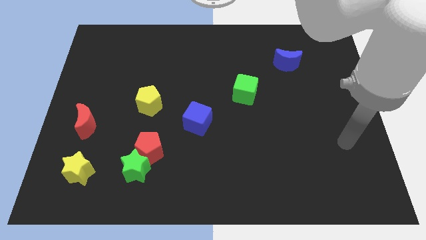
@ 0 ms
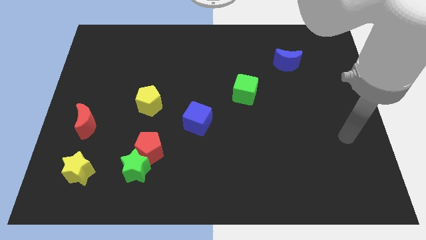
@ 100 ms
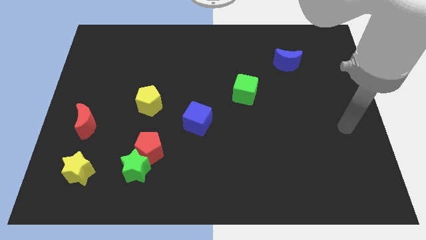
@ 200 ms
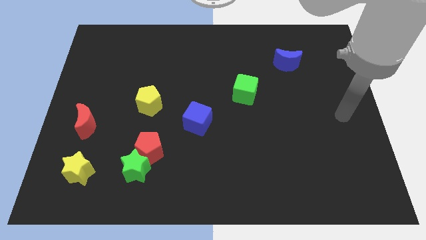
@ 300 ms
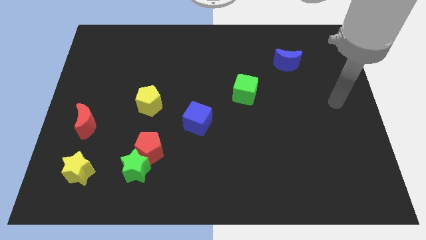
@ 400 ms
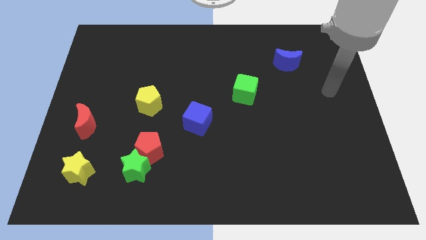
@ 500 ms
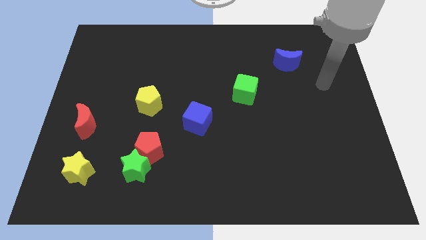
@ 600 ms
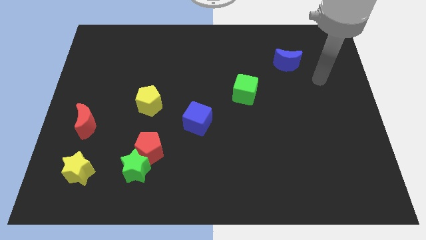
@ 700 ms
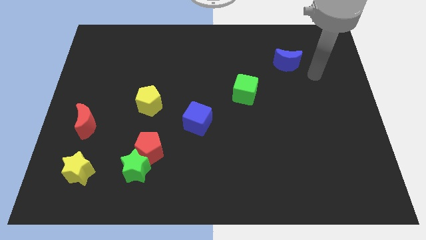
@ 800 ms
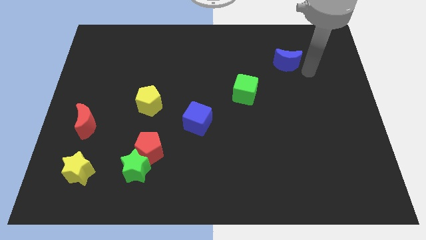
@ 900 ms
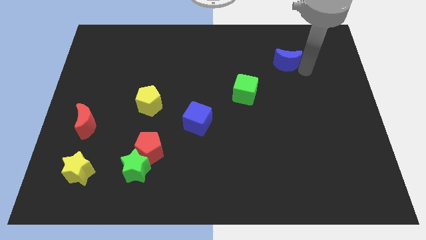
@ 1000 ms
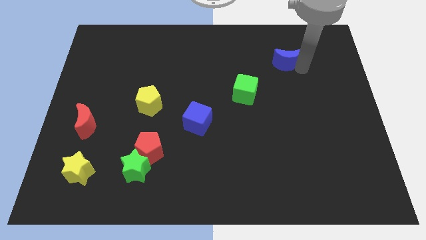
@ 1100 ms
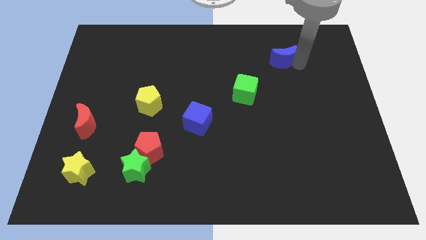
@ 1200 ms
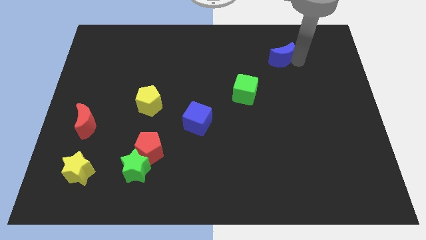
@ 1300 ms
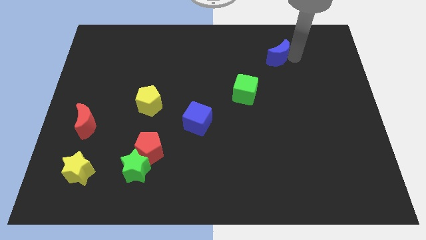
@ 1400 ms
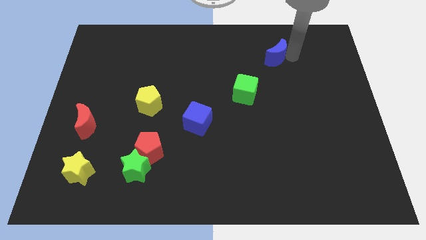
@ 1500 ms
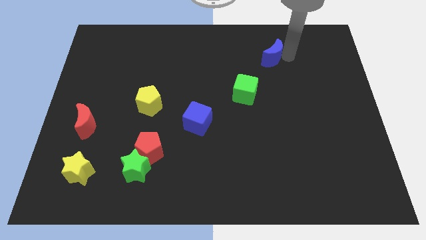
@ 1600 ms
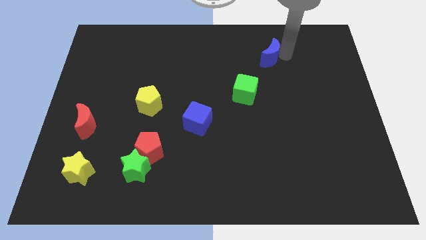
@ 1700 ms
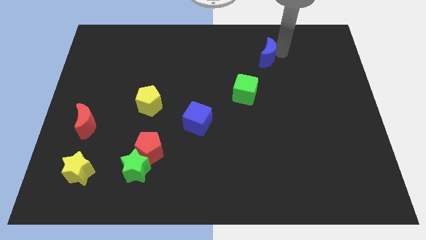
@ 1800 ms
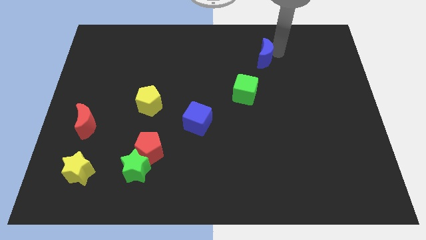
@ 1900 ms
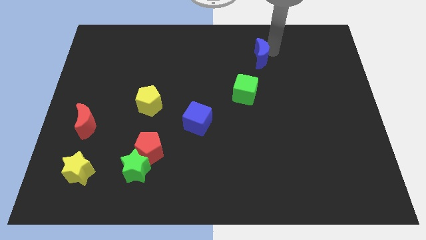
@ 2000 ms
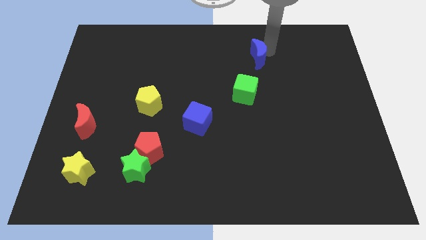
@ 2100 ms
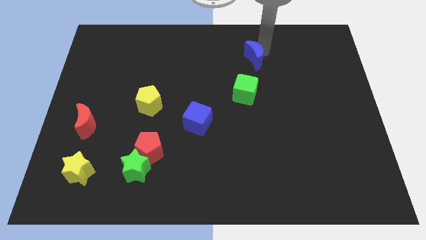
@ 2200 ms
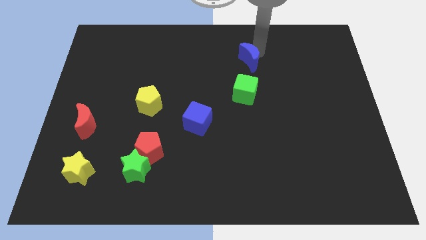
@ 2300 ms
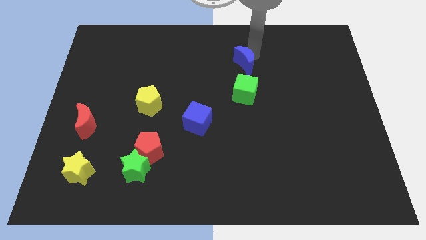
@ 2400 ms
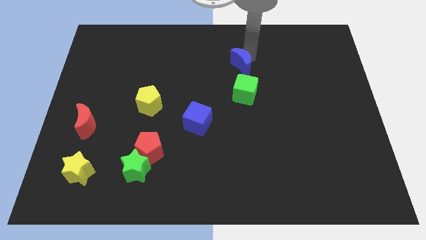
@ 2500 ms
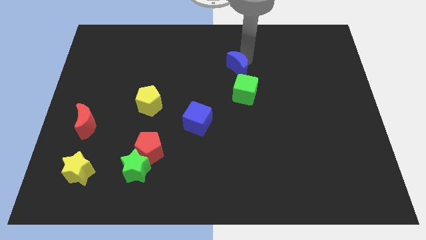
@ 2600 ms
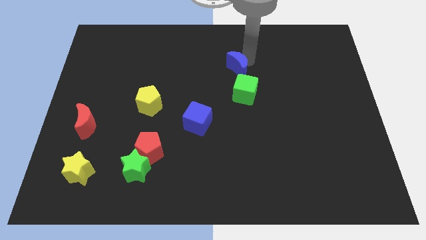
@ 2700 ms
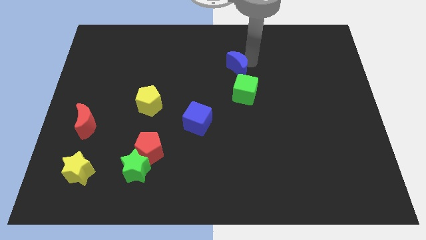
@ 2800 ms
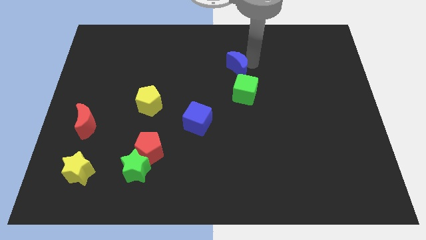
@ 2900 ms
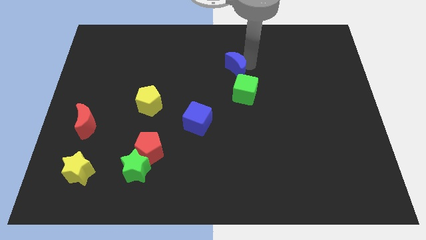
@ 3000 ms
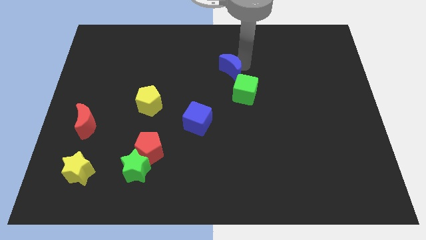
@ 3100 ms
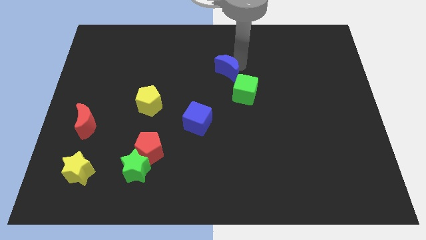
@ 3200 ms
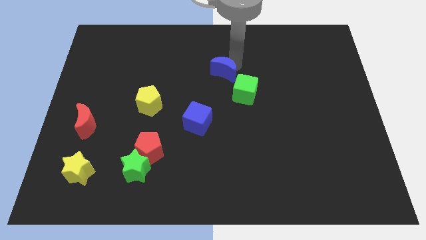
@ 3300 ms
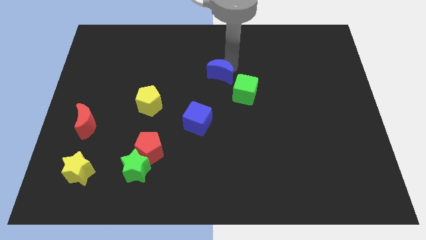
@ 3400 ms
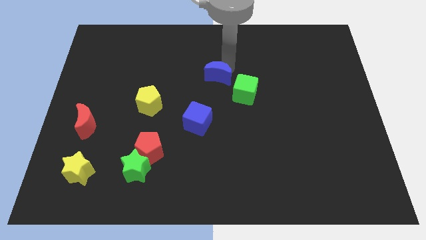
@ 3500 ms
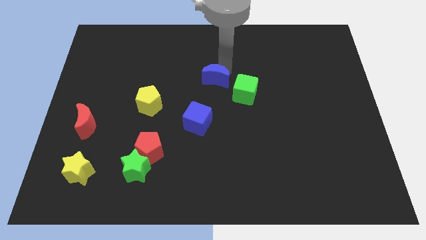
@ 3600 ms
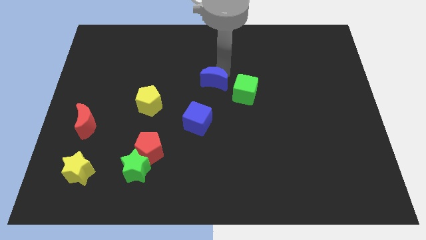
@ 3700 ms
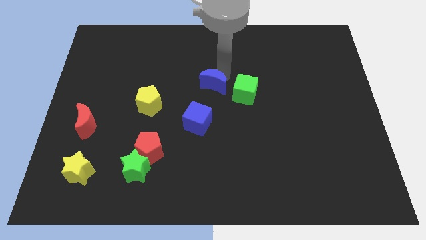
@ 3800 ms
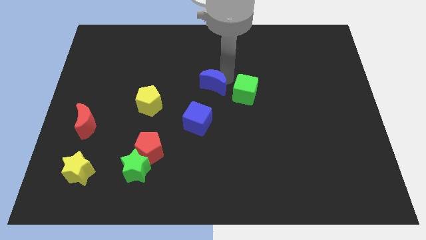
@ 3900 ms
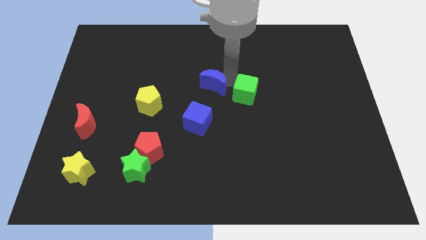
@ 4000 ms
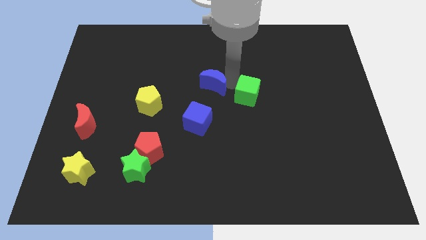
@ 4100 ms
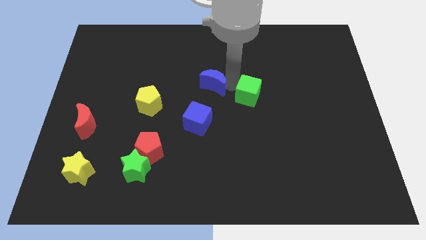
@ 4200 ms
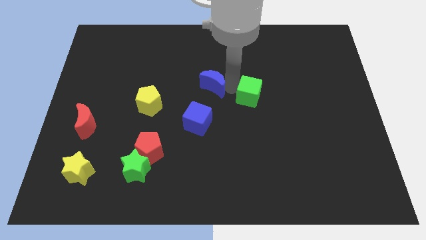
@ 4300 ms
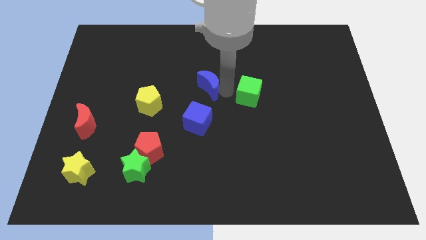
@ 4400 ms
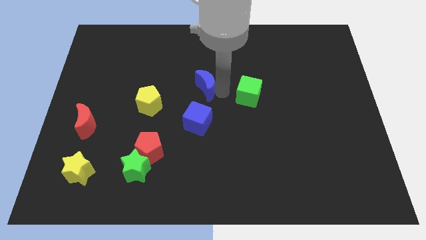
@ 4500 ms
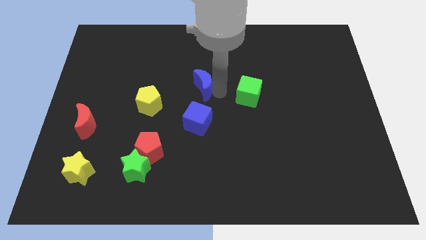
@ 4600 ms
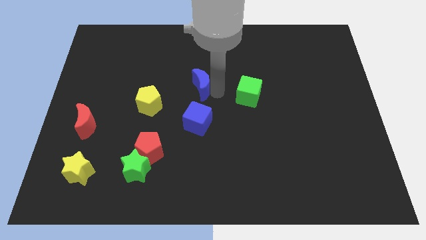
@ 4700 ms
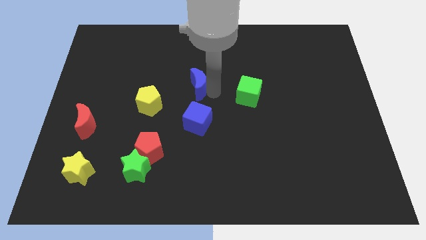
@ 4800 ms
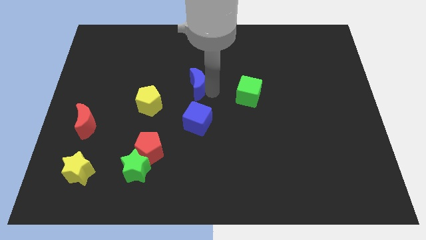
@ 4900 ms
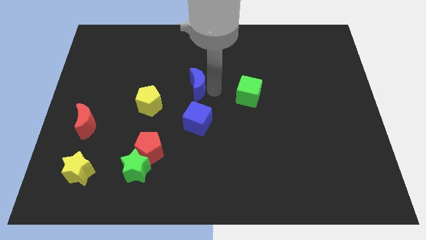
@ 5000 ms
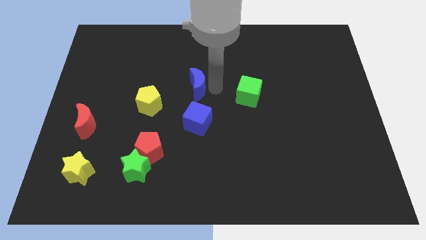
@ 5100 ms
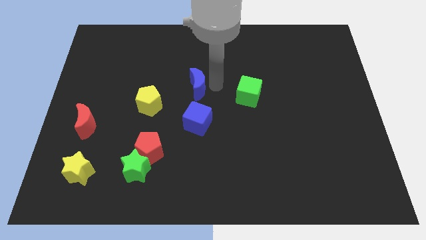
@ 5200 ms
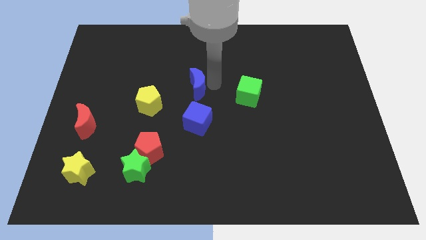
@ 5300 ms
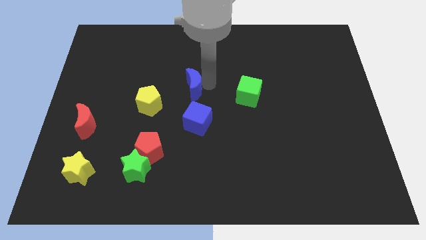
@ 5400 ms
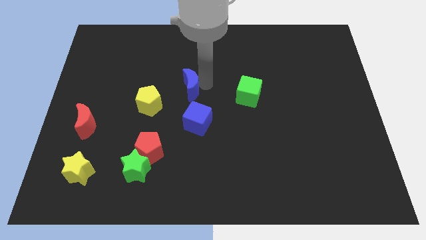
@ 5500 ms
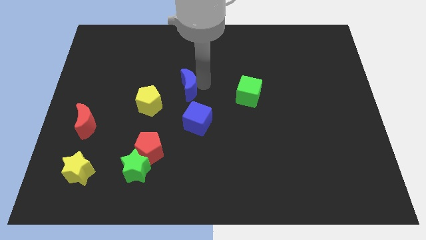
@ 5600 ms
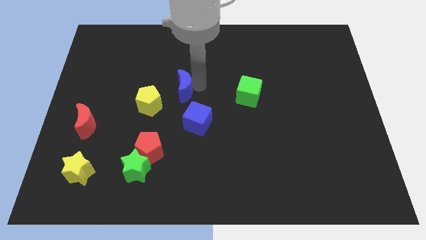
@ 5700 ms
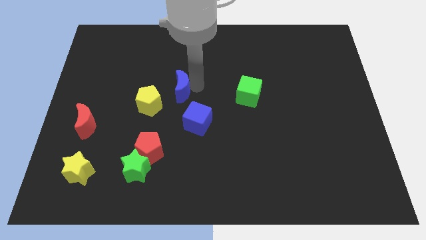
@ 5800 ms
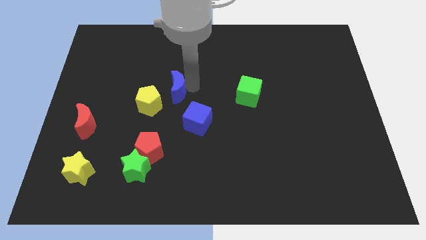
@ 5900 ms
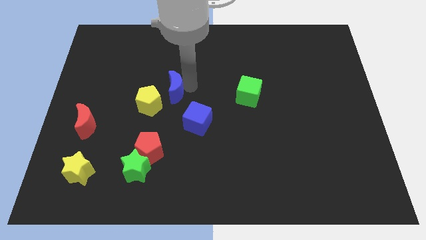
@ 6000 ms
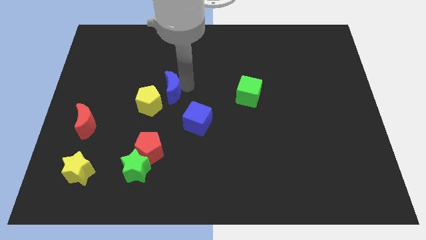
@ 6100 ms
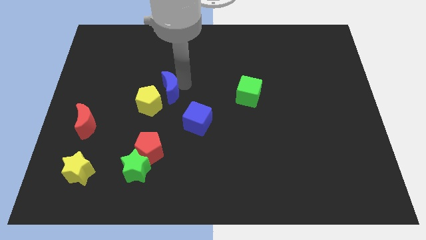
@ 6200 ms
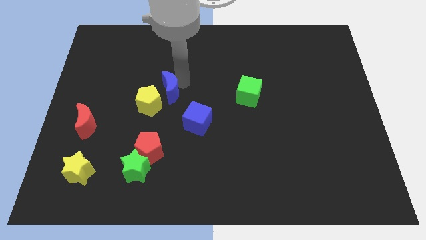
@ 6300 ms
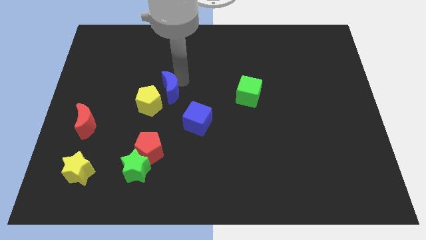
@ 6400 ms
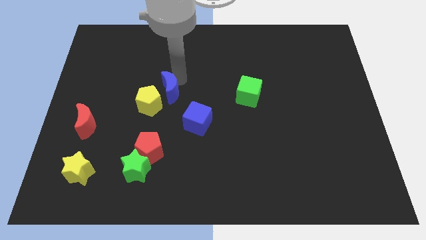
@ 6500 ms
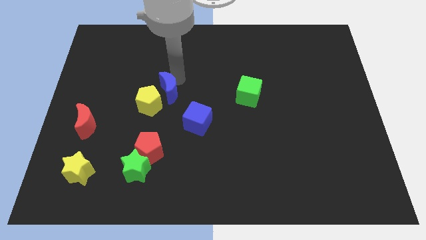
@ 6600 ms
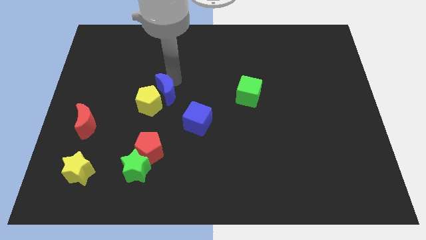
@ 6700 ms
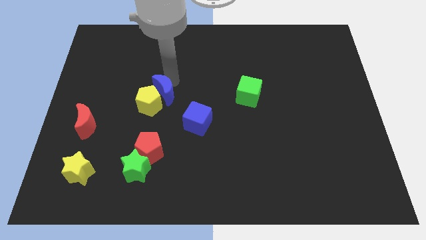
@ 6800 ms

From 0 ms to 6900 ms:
push the blue moon to the yellow pentagon

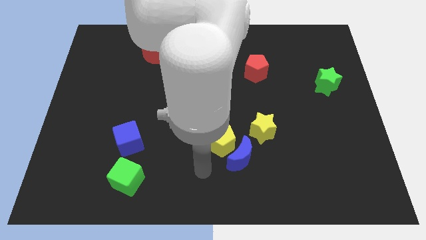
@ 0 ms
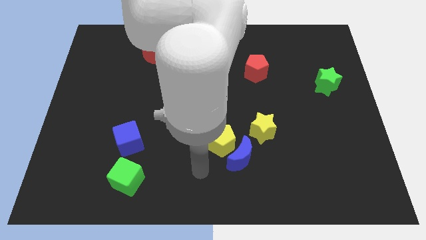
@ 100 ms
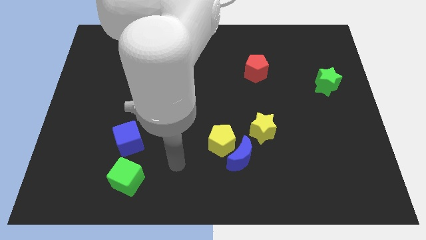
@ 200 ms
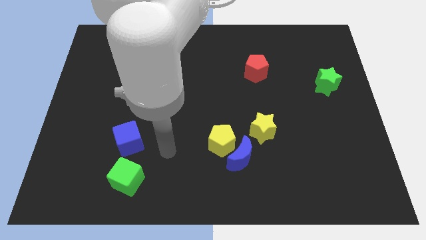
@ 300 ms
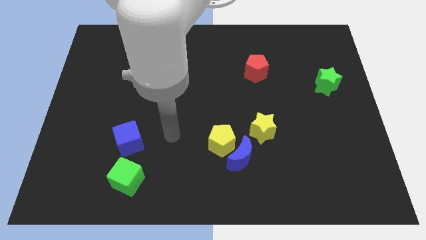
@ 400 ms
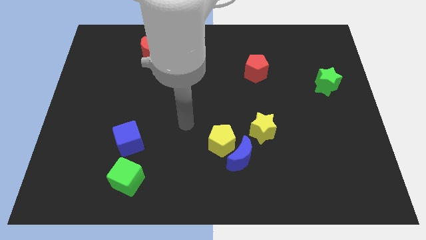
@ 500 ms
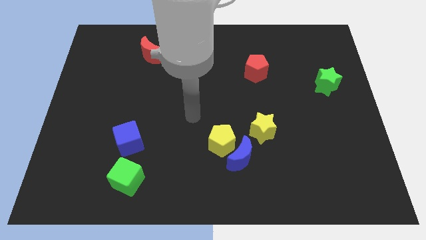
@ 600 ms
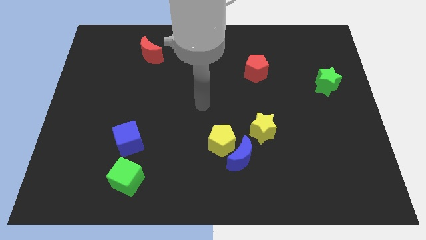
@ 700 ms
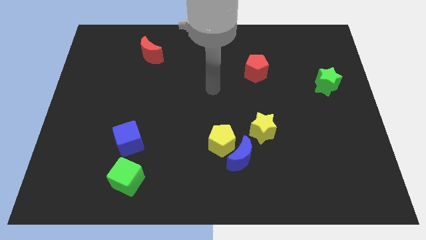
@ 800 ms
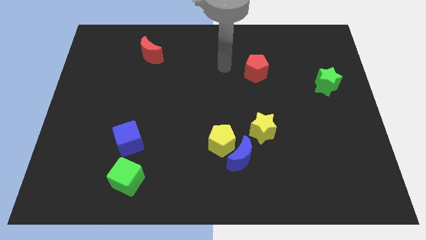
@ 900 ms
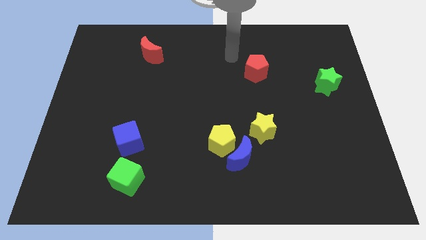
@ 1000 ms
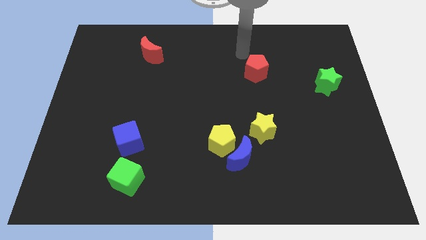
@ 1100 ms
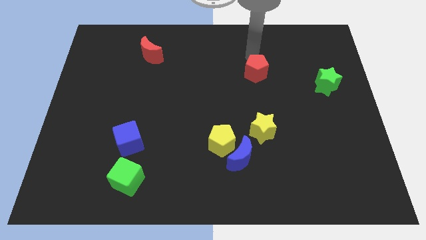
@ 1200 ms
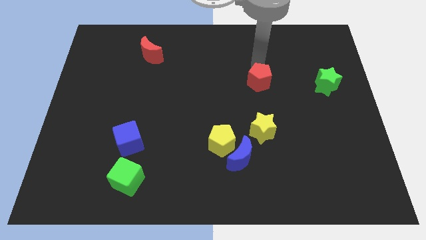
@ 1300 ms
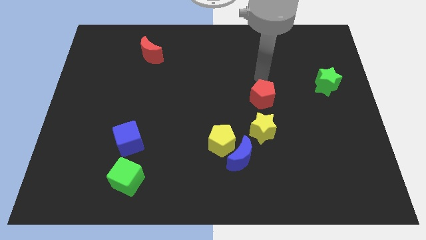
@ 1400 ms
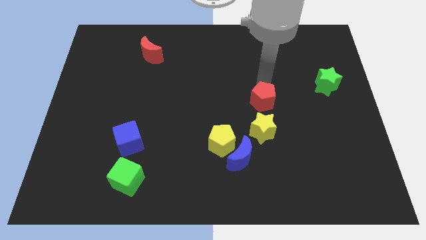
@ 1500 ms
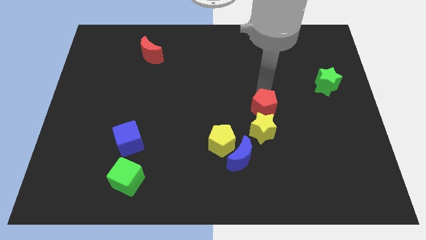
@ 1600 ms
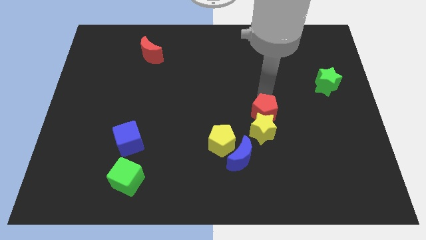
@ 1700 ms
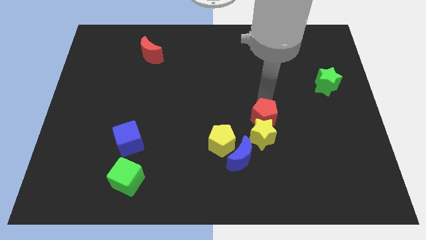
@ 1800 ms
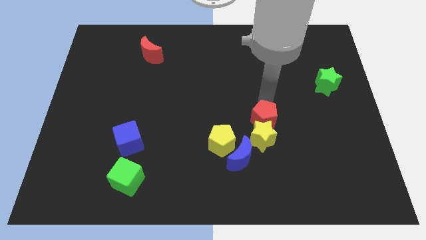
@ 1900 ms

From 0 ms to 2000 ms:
put the red pentagon to the yellow star
